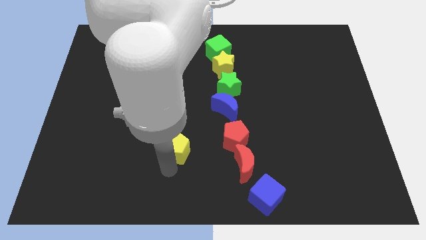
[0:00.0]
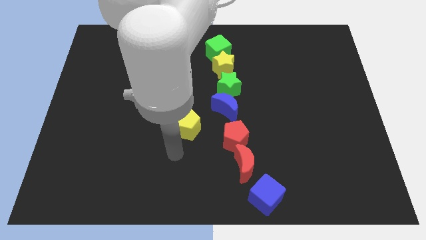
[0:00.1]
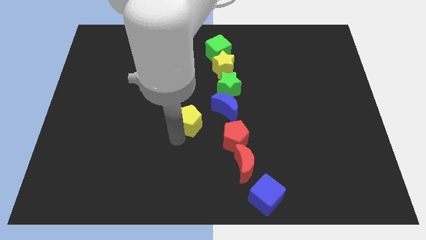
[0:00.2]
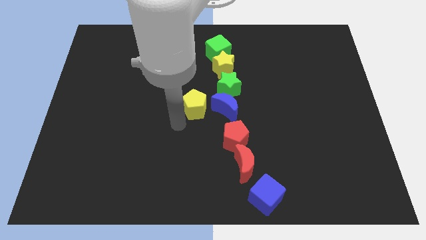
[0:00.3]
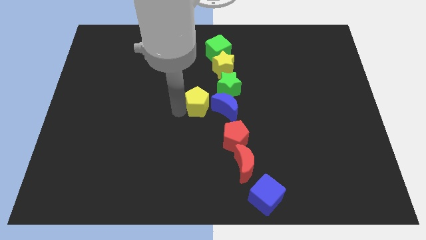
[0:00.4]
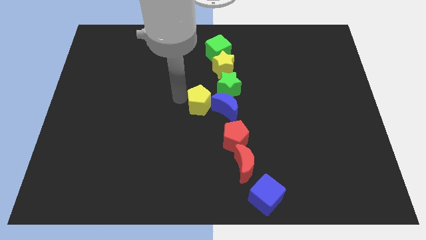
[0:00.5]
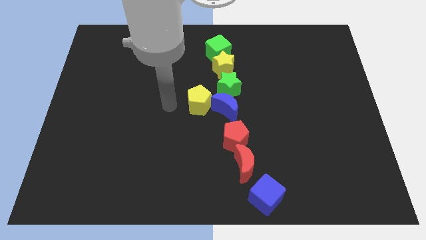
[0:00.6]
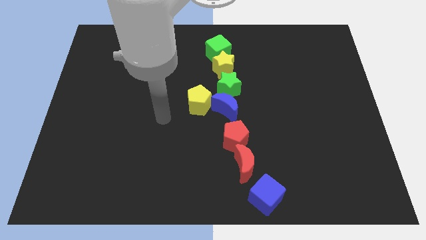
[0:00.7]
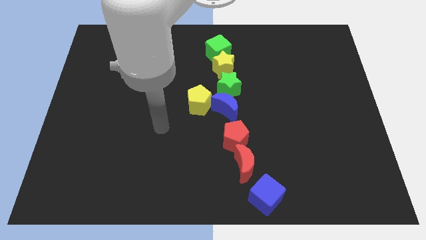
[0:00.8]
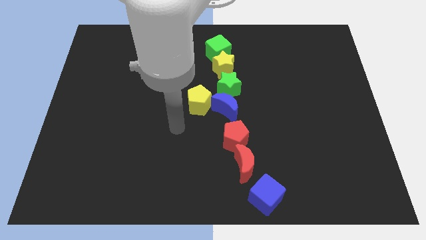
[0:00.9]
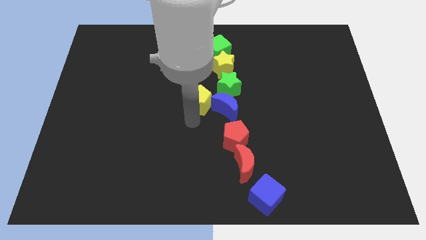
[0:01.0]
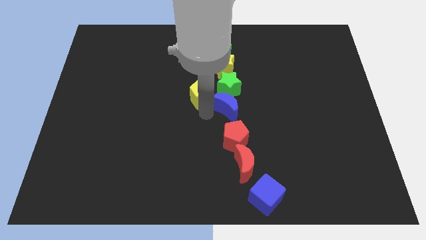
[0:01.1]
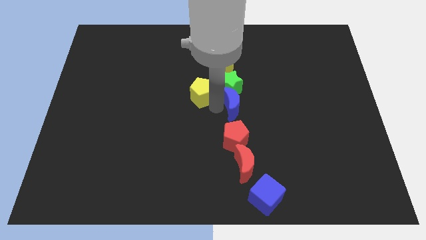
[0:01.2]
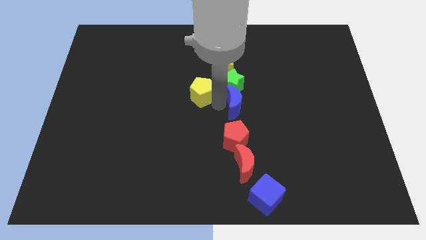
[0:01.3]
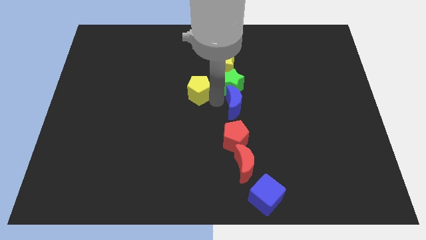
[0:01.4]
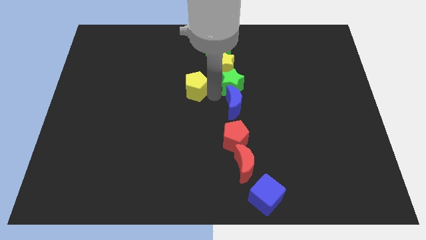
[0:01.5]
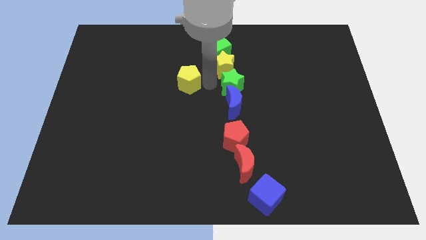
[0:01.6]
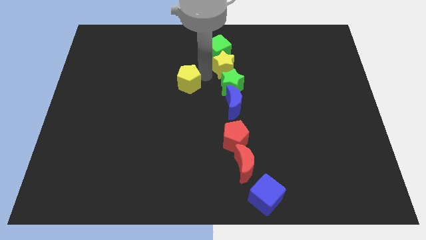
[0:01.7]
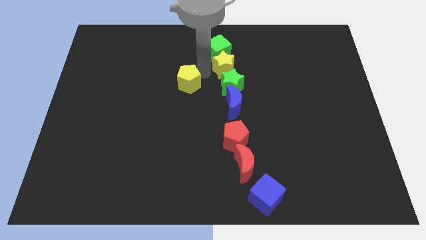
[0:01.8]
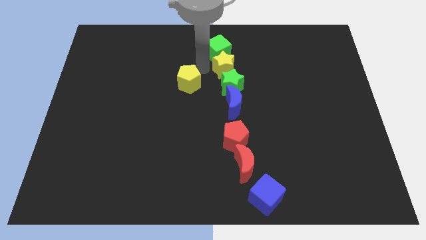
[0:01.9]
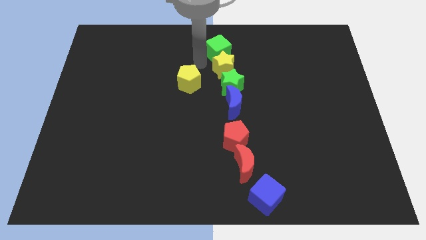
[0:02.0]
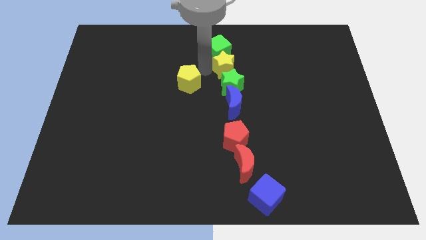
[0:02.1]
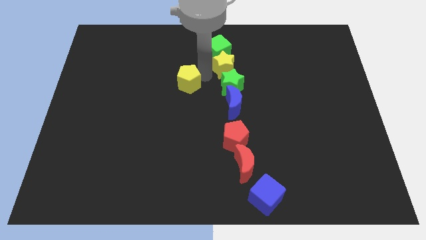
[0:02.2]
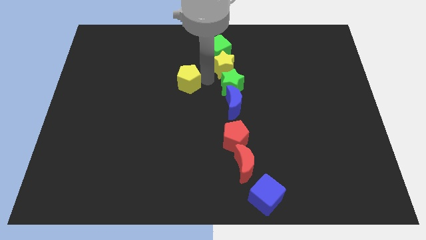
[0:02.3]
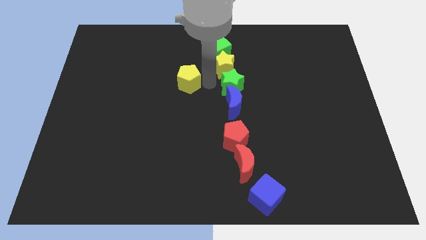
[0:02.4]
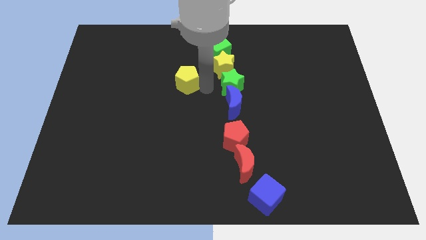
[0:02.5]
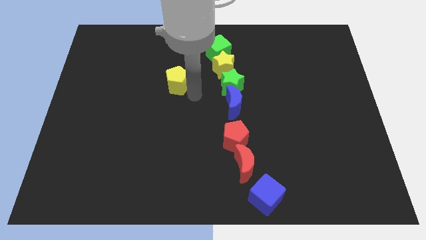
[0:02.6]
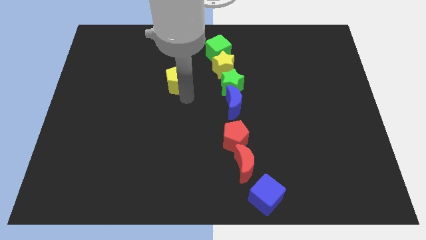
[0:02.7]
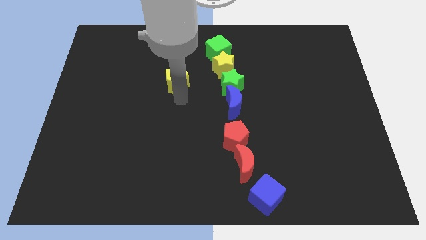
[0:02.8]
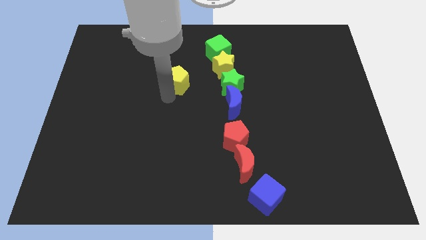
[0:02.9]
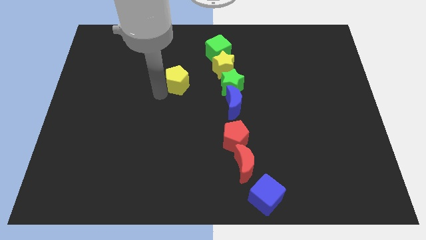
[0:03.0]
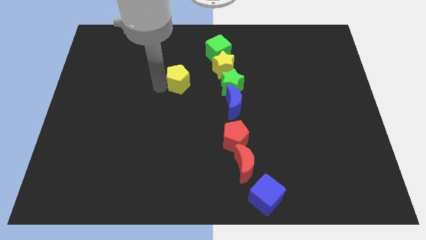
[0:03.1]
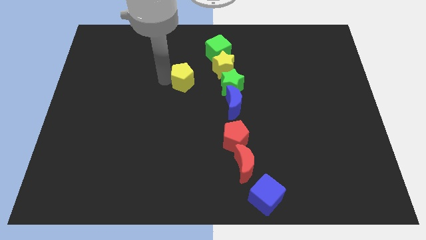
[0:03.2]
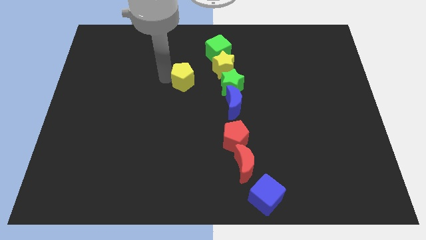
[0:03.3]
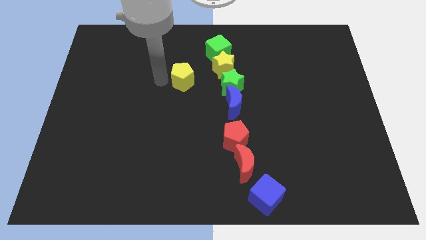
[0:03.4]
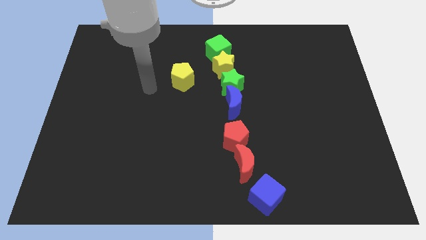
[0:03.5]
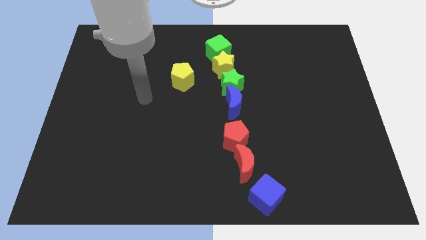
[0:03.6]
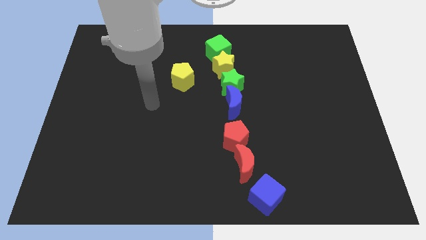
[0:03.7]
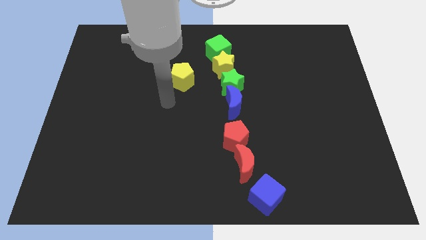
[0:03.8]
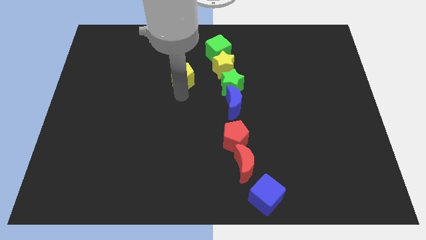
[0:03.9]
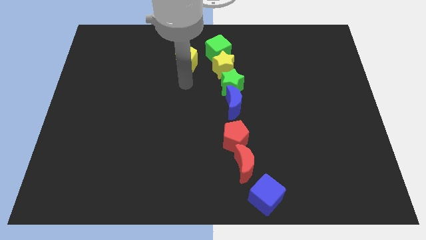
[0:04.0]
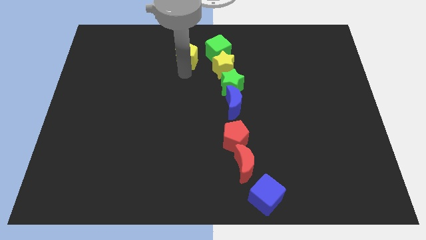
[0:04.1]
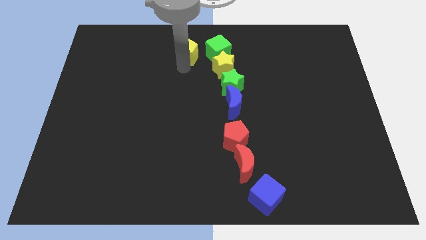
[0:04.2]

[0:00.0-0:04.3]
move the yellow pentagon to the top of the board

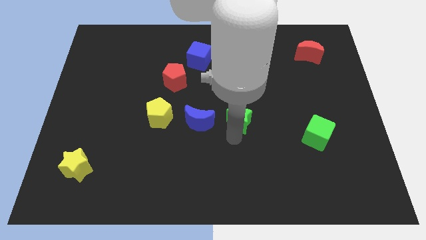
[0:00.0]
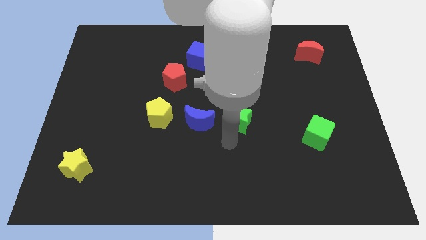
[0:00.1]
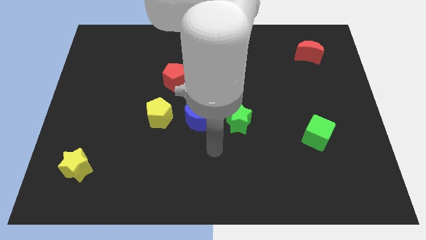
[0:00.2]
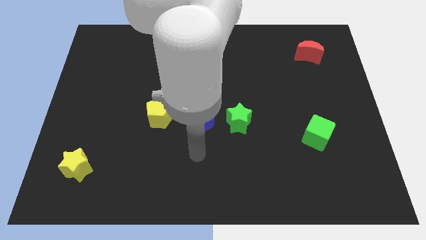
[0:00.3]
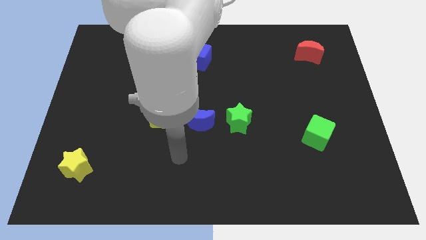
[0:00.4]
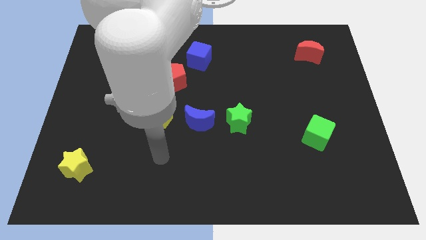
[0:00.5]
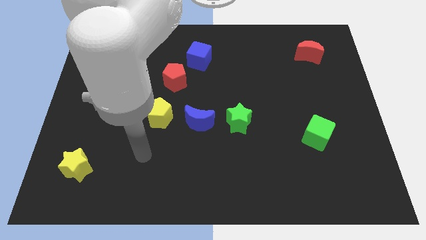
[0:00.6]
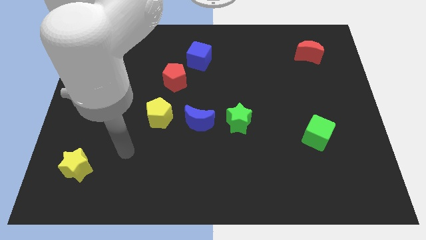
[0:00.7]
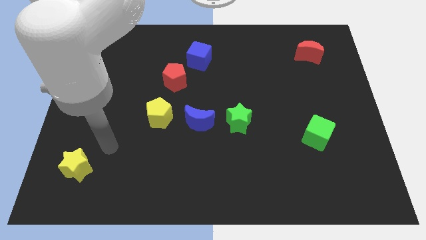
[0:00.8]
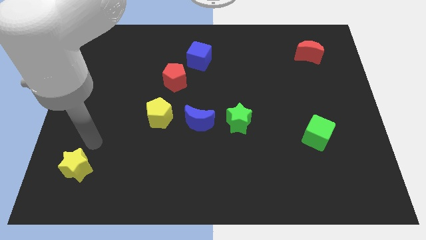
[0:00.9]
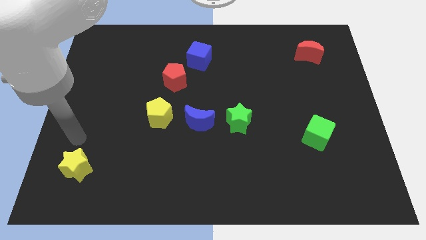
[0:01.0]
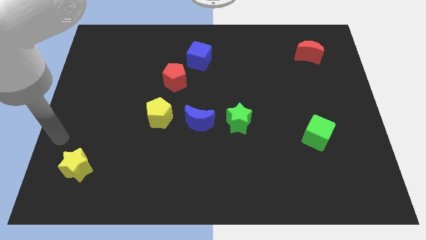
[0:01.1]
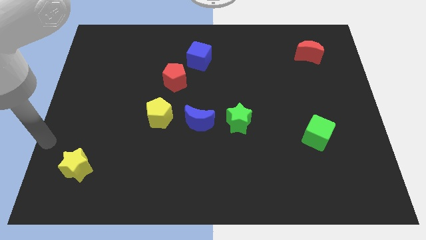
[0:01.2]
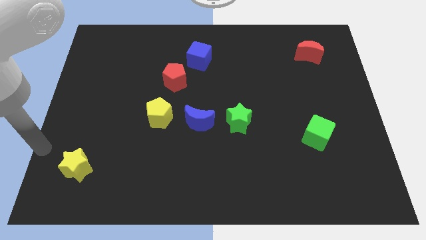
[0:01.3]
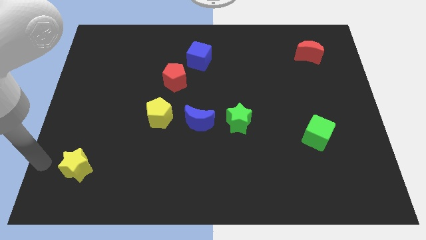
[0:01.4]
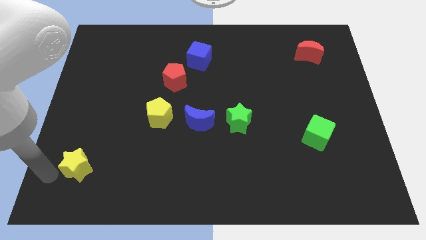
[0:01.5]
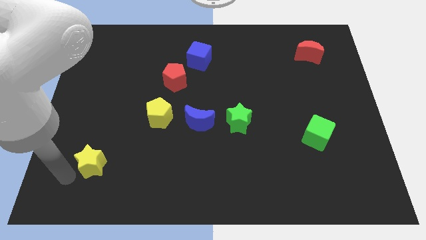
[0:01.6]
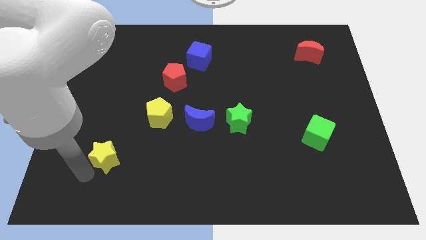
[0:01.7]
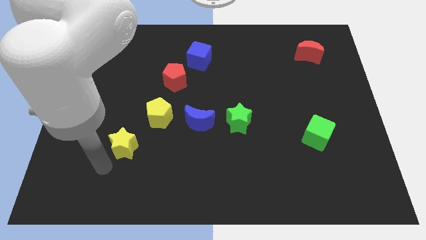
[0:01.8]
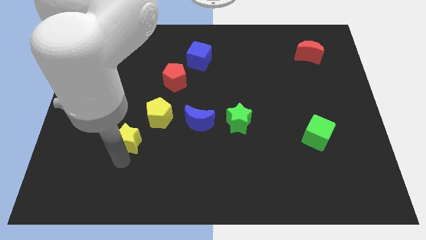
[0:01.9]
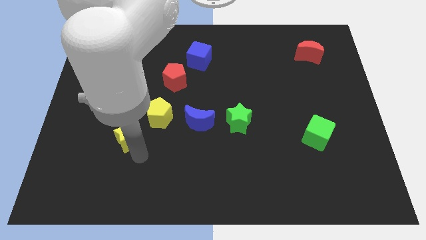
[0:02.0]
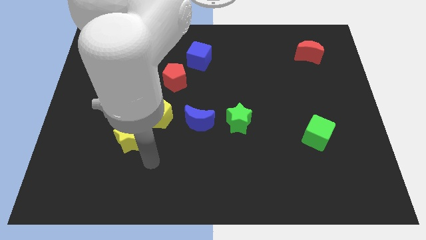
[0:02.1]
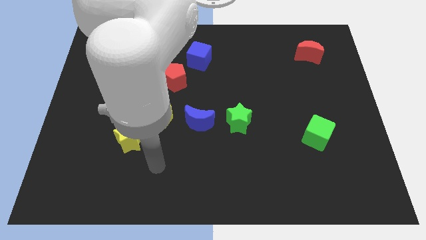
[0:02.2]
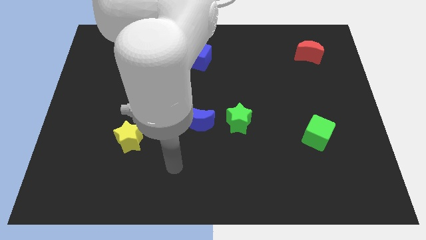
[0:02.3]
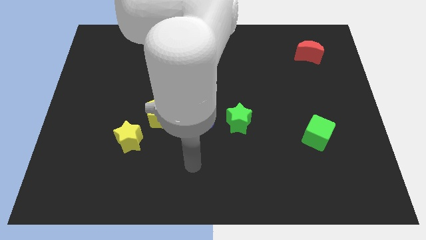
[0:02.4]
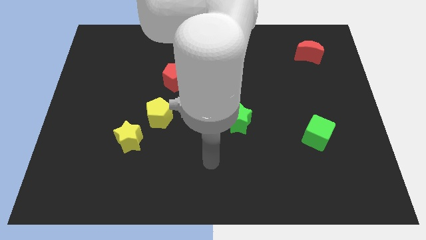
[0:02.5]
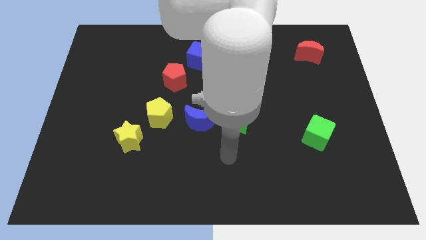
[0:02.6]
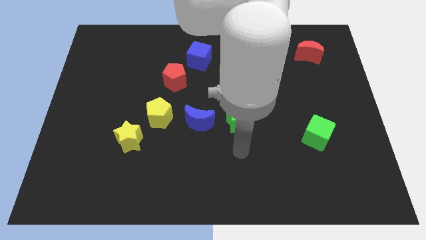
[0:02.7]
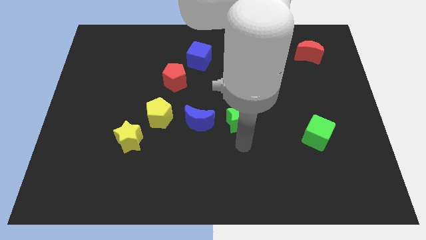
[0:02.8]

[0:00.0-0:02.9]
put the yellow star to the bottom left side of the yellow pentagon

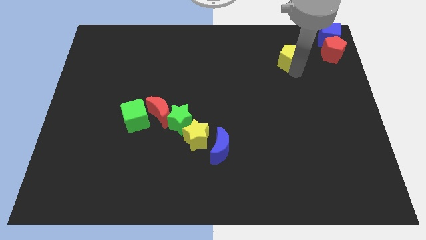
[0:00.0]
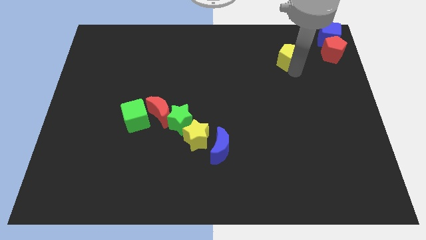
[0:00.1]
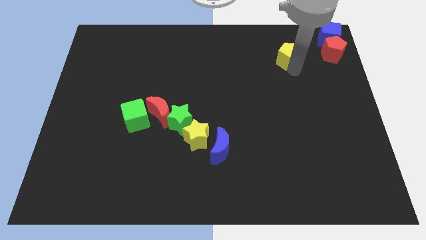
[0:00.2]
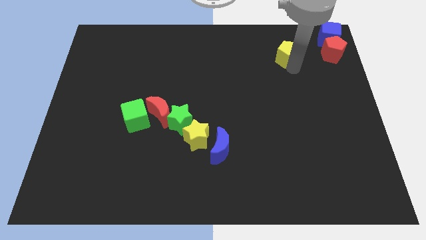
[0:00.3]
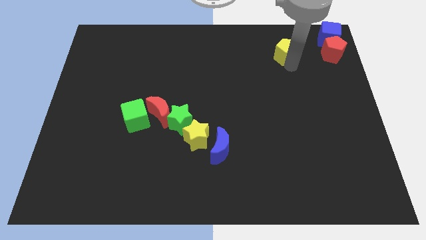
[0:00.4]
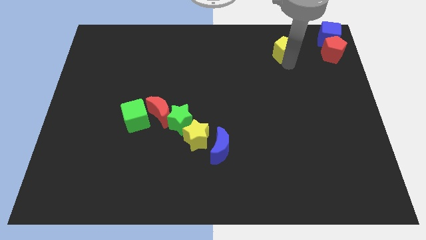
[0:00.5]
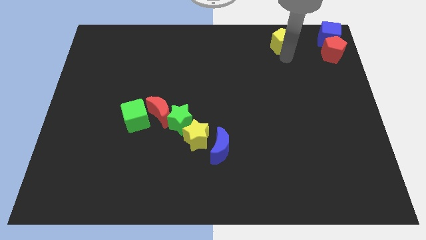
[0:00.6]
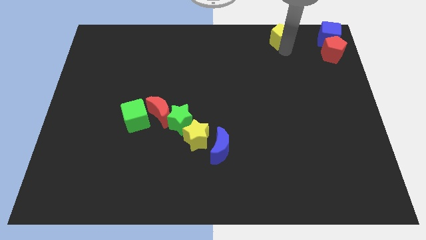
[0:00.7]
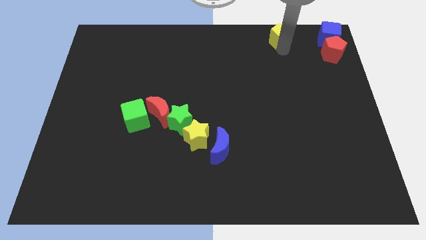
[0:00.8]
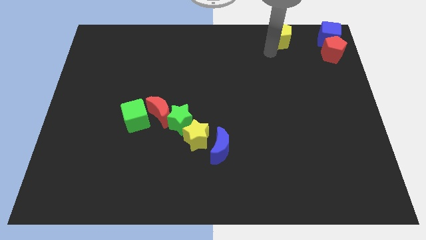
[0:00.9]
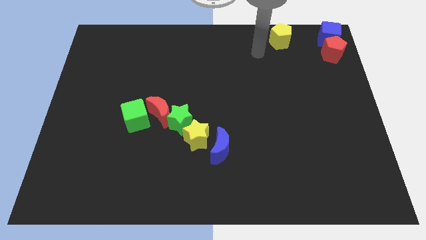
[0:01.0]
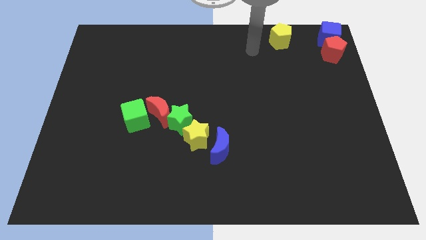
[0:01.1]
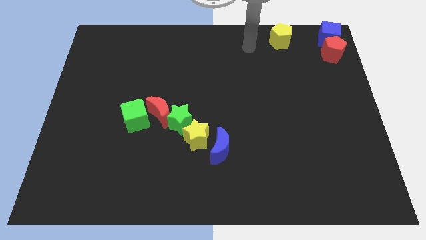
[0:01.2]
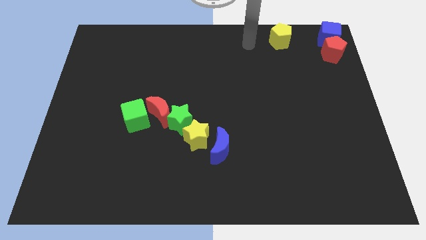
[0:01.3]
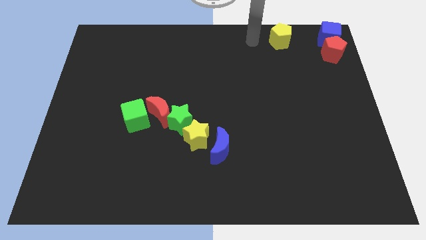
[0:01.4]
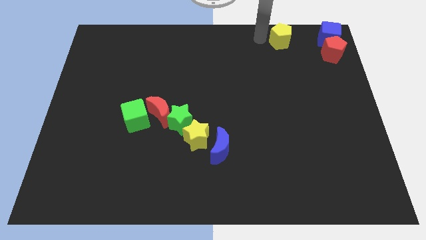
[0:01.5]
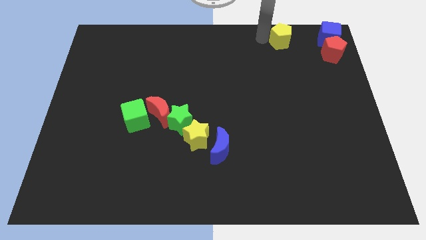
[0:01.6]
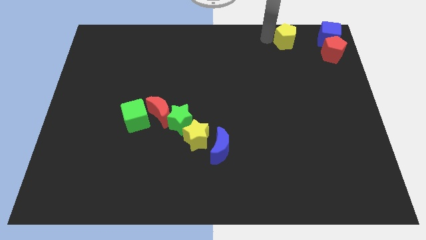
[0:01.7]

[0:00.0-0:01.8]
put the yellow pentagon to the left of the blue cube
